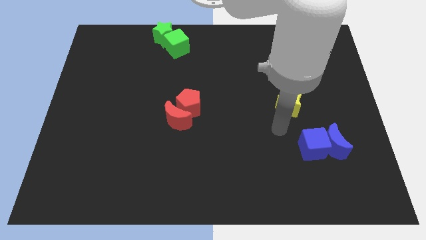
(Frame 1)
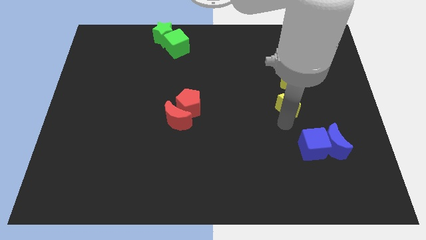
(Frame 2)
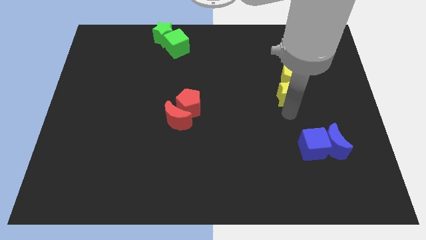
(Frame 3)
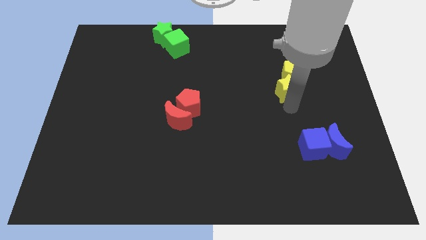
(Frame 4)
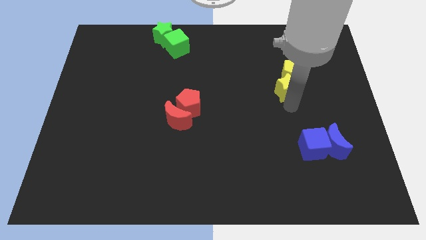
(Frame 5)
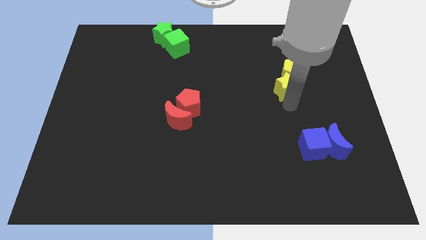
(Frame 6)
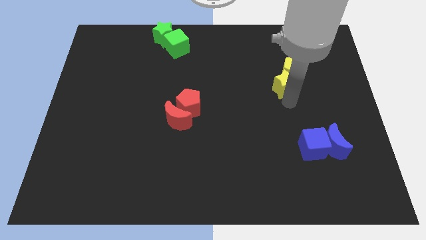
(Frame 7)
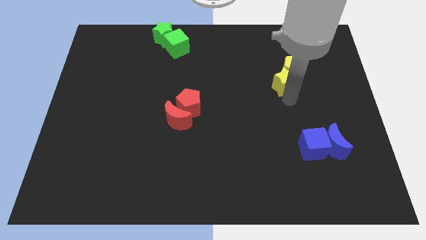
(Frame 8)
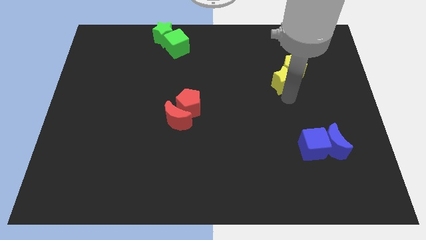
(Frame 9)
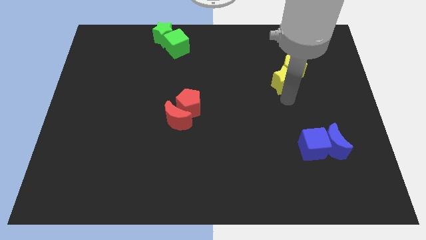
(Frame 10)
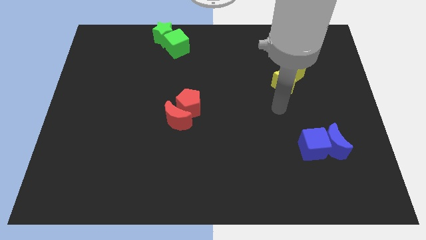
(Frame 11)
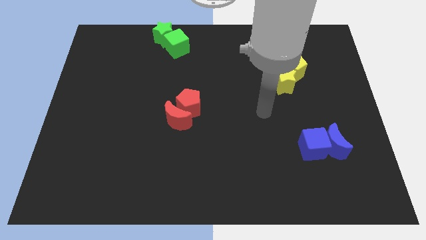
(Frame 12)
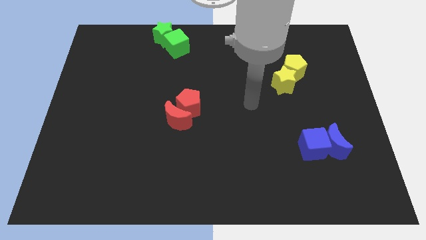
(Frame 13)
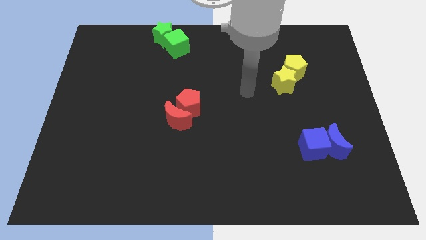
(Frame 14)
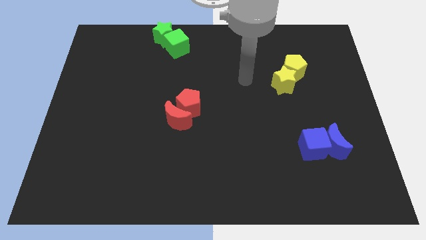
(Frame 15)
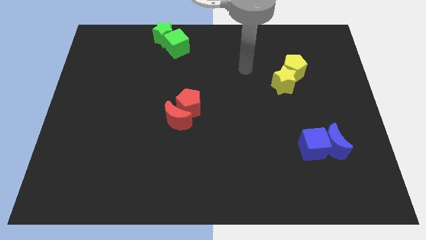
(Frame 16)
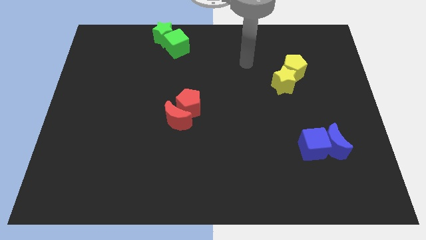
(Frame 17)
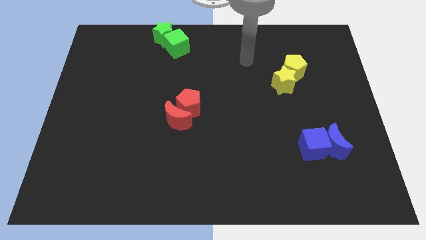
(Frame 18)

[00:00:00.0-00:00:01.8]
move the yellow star into the yellow pentagon and go away

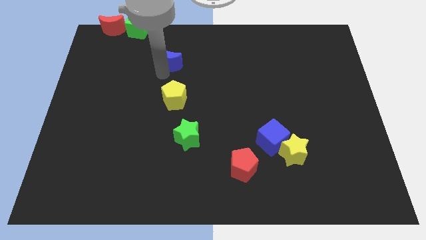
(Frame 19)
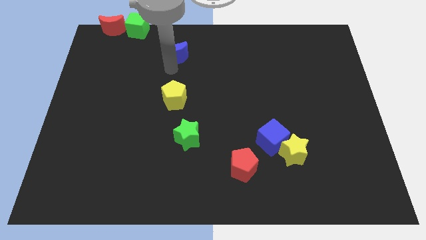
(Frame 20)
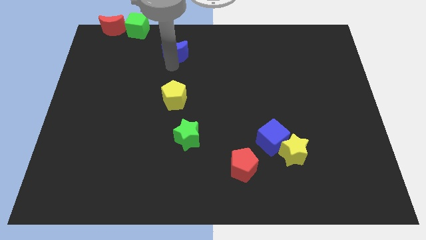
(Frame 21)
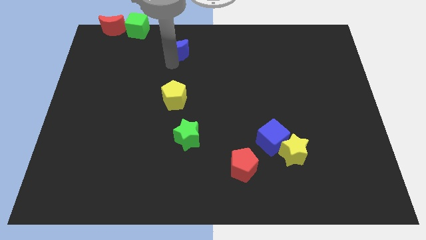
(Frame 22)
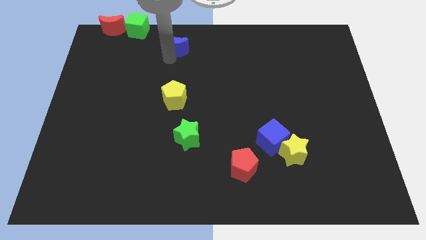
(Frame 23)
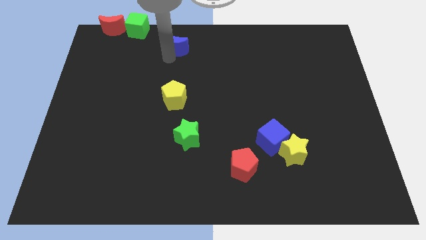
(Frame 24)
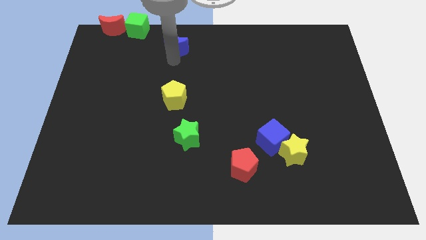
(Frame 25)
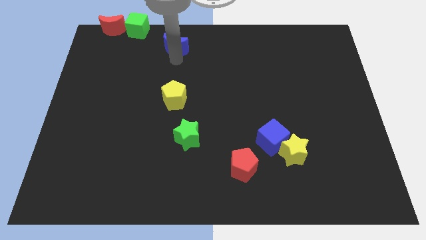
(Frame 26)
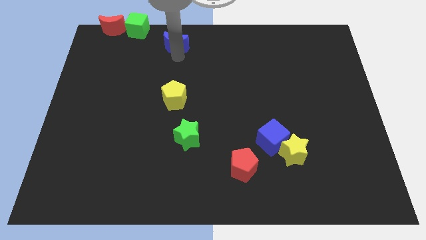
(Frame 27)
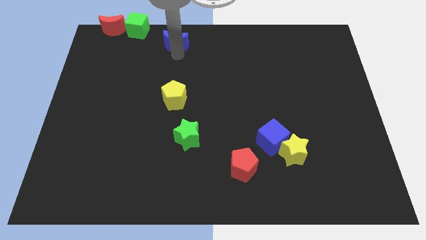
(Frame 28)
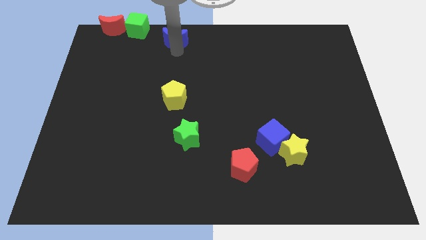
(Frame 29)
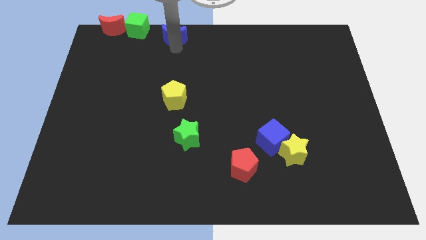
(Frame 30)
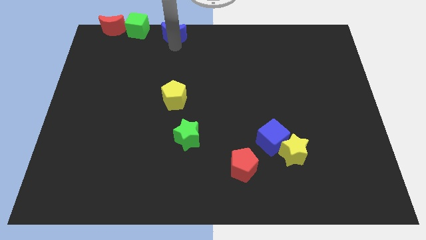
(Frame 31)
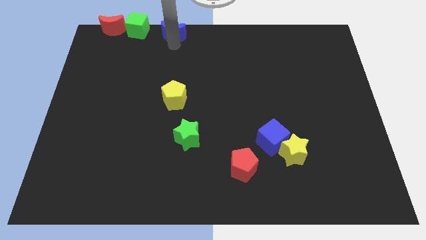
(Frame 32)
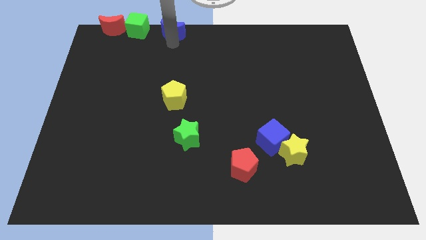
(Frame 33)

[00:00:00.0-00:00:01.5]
push the blue crescent to the right of the green cube

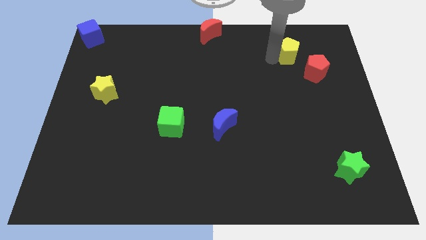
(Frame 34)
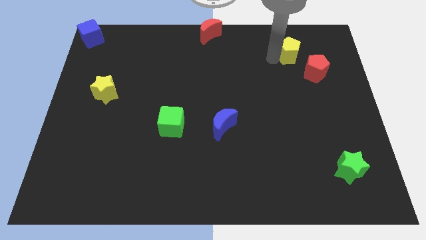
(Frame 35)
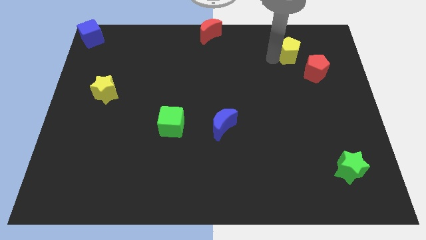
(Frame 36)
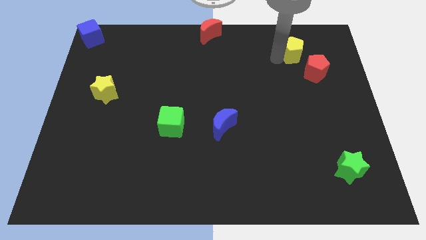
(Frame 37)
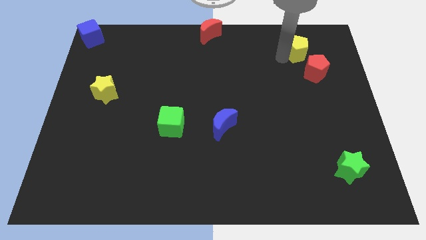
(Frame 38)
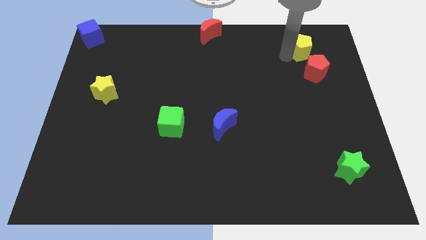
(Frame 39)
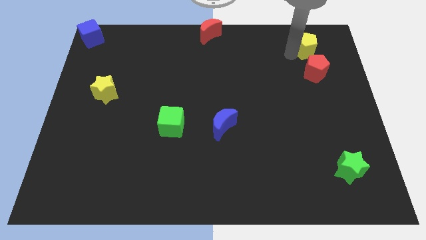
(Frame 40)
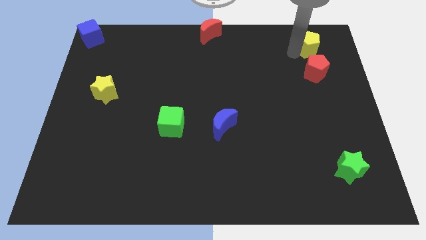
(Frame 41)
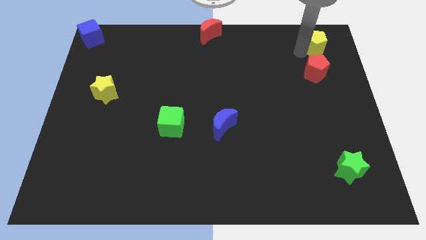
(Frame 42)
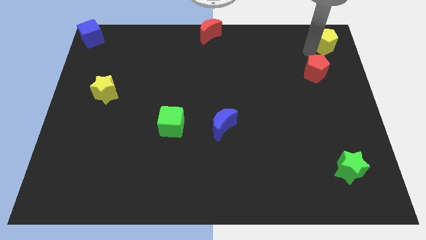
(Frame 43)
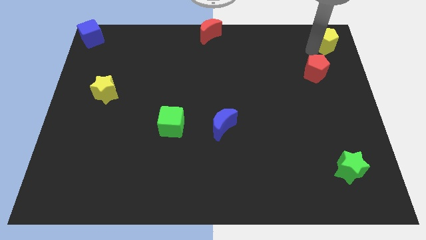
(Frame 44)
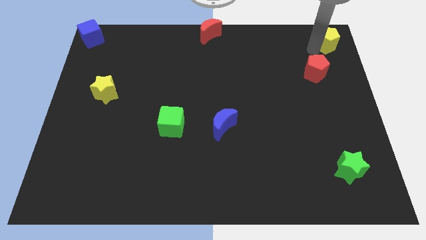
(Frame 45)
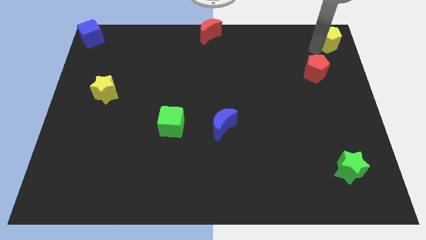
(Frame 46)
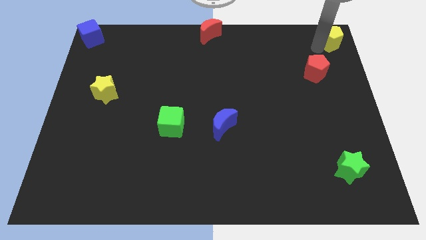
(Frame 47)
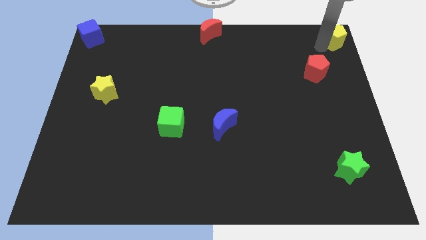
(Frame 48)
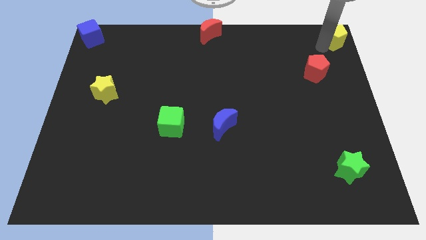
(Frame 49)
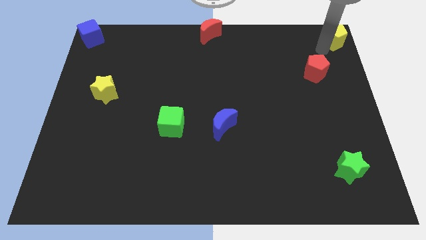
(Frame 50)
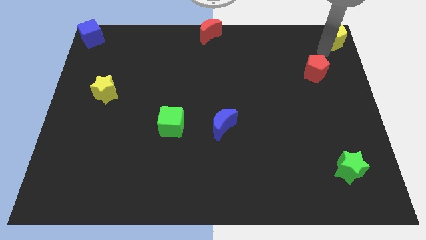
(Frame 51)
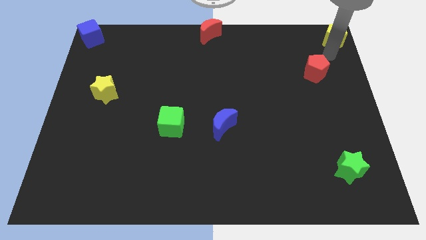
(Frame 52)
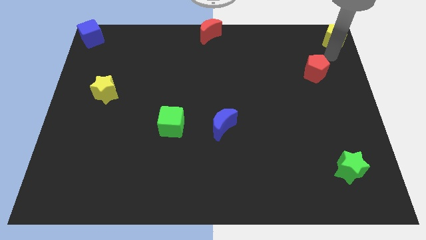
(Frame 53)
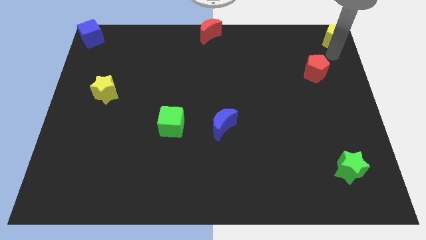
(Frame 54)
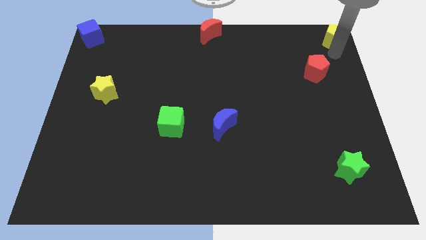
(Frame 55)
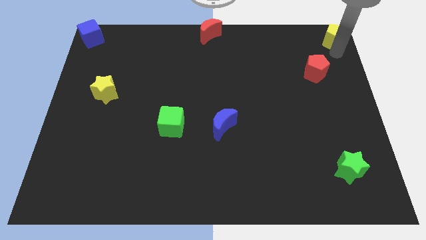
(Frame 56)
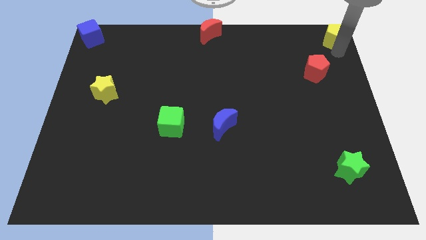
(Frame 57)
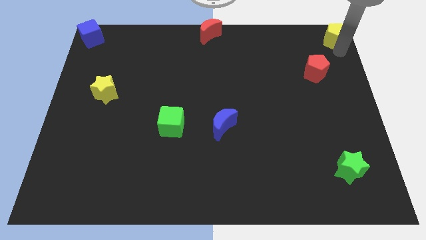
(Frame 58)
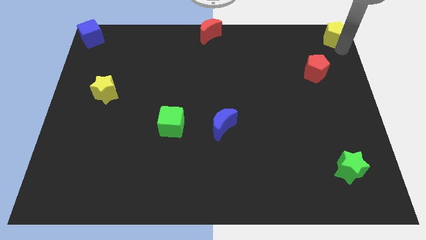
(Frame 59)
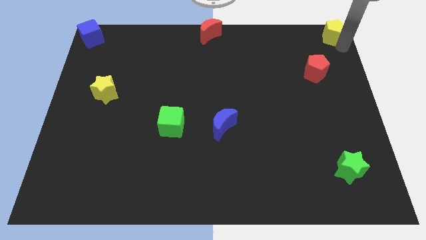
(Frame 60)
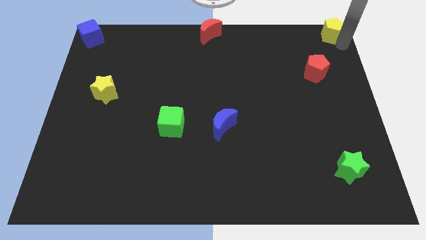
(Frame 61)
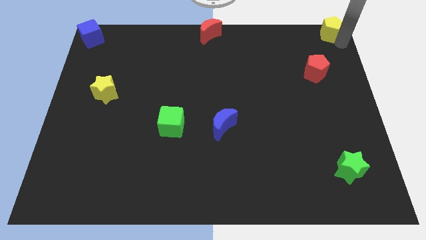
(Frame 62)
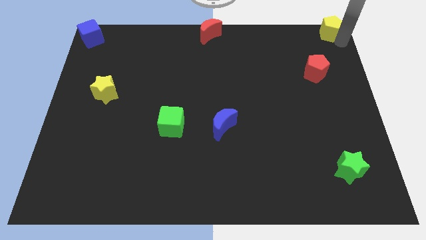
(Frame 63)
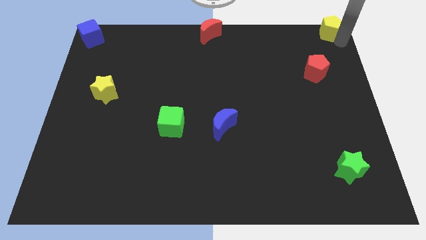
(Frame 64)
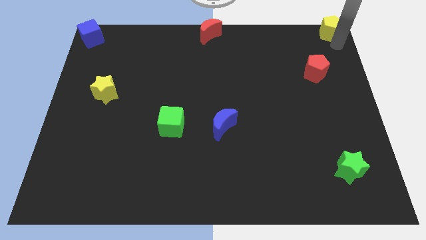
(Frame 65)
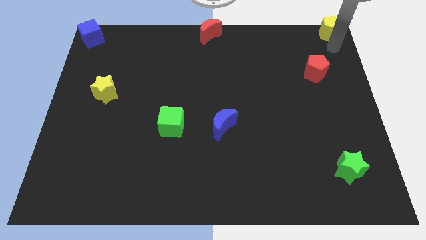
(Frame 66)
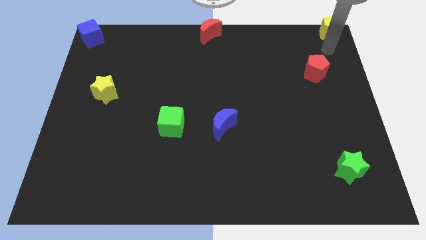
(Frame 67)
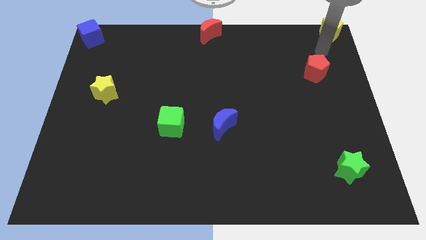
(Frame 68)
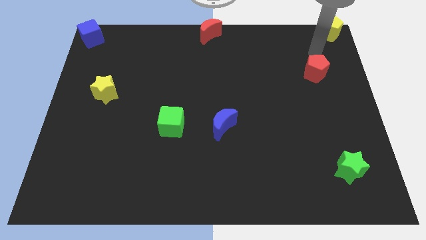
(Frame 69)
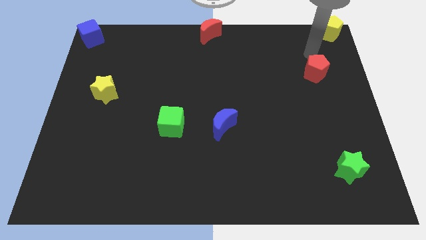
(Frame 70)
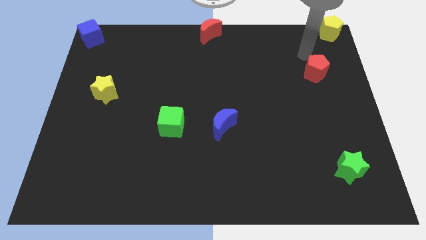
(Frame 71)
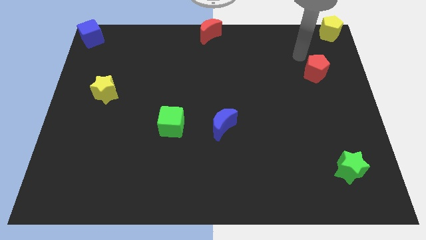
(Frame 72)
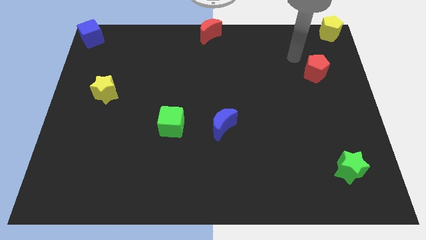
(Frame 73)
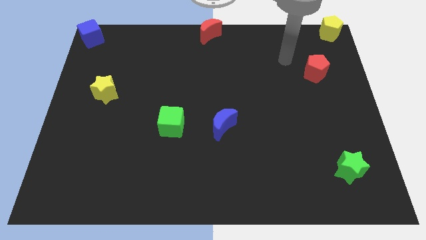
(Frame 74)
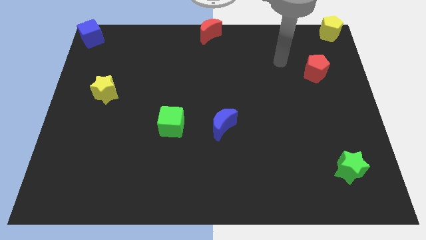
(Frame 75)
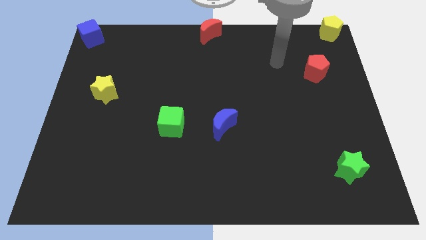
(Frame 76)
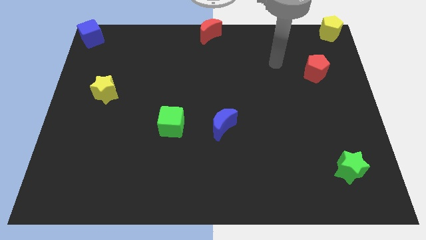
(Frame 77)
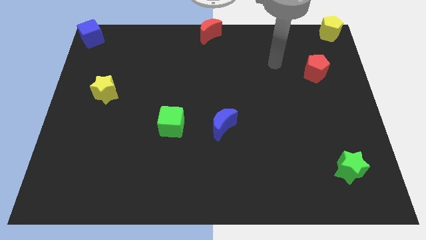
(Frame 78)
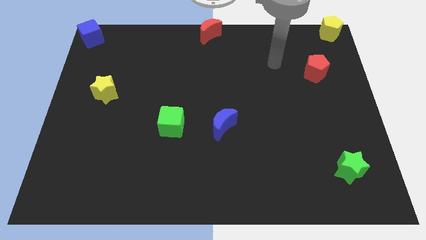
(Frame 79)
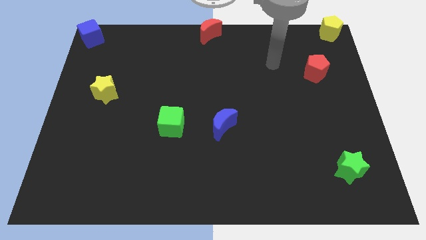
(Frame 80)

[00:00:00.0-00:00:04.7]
place the yellow pentagon to the top right corner

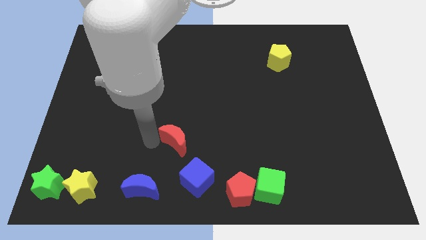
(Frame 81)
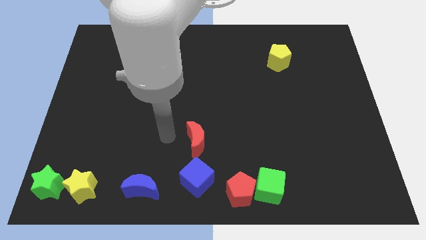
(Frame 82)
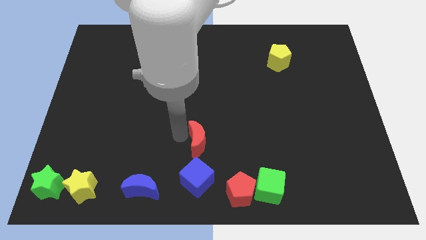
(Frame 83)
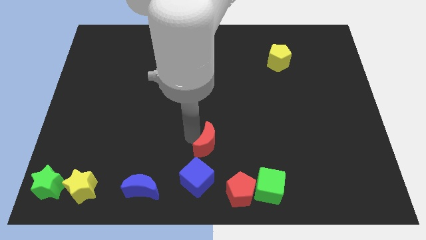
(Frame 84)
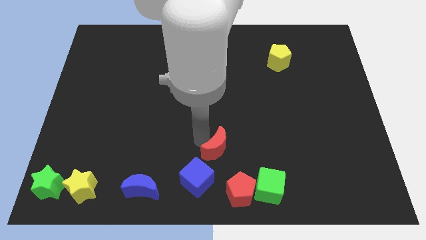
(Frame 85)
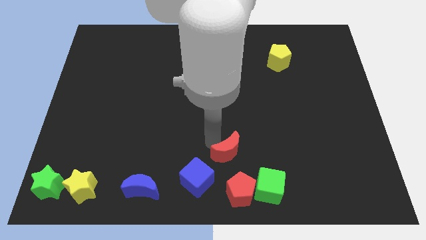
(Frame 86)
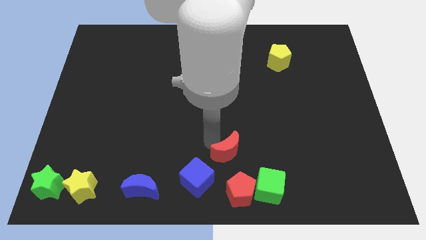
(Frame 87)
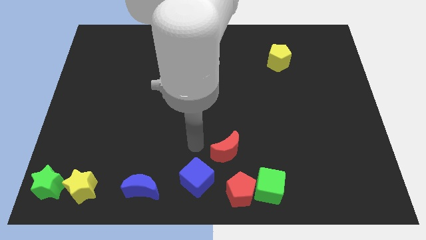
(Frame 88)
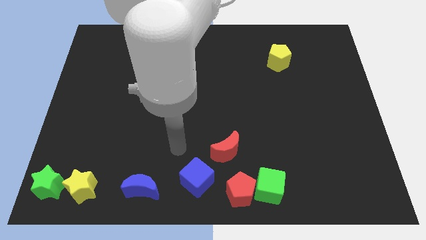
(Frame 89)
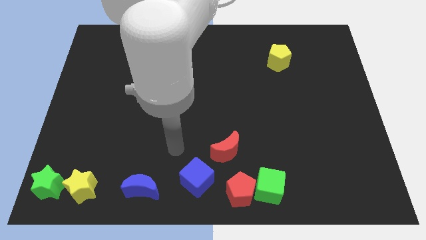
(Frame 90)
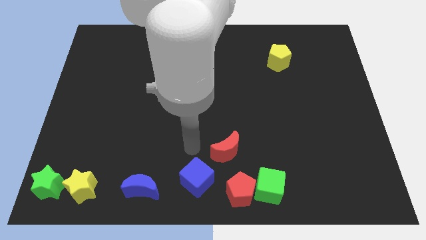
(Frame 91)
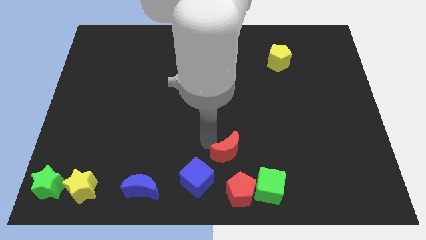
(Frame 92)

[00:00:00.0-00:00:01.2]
move the red moon above the red pentagon
